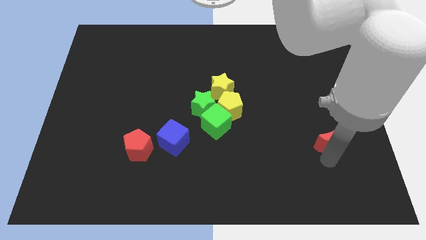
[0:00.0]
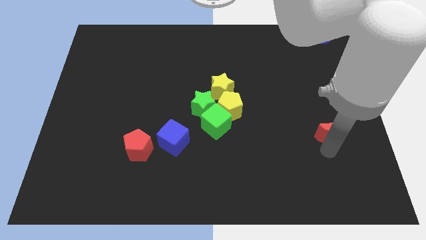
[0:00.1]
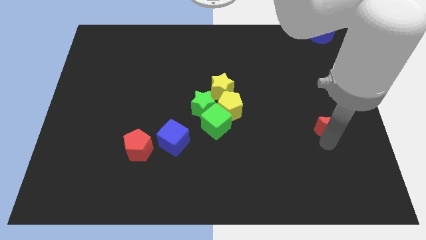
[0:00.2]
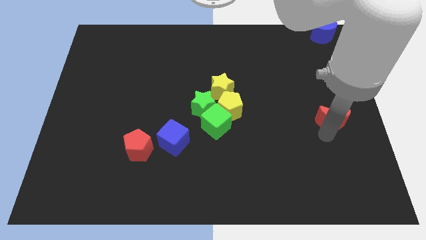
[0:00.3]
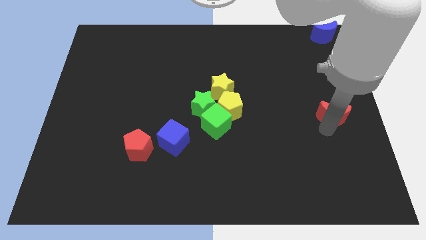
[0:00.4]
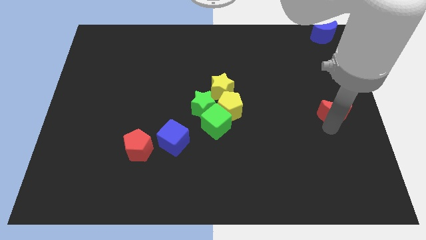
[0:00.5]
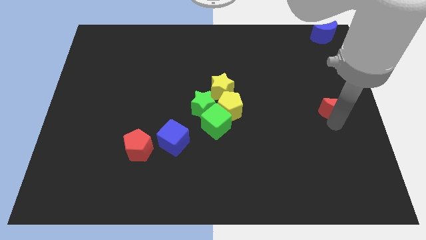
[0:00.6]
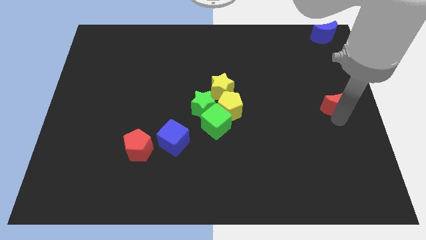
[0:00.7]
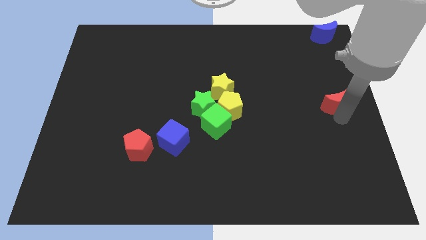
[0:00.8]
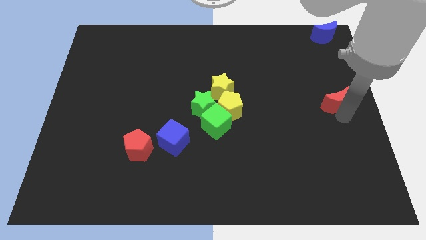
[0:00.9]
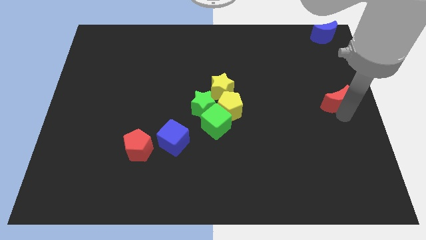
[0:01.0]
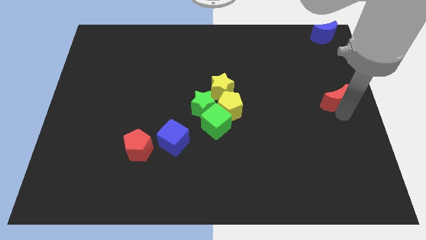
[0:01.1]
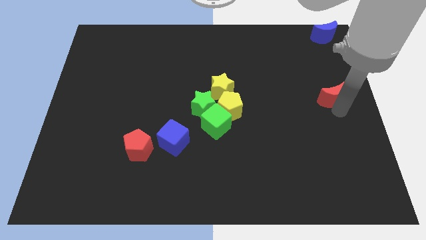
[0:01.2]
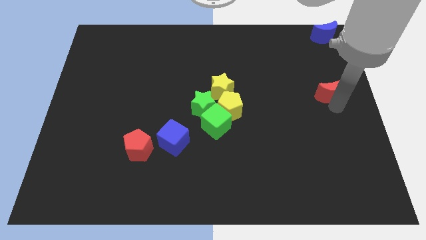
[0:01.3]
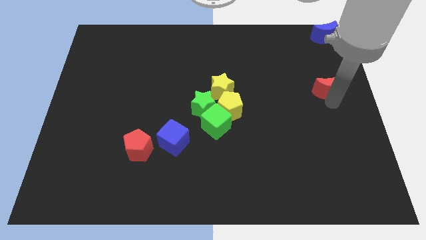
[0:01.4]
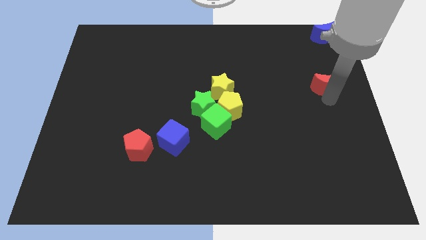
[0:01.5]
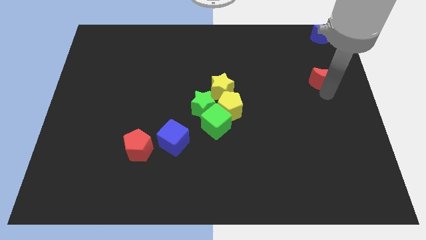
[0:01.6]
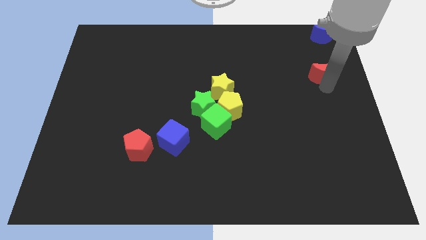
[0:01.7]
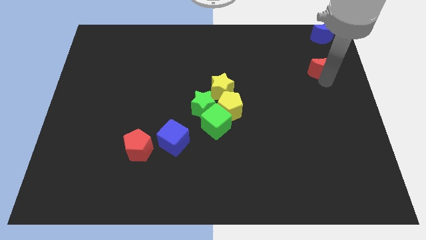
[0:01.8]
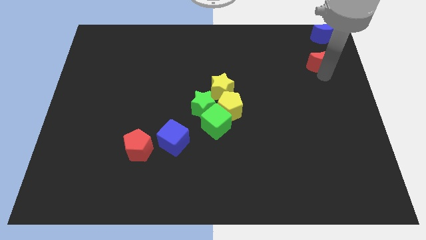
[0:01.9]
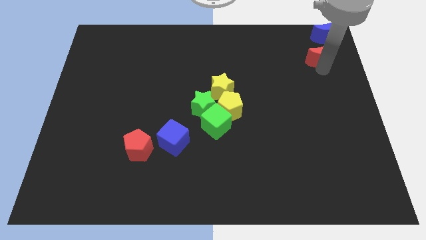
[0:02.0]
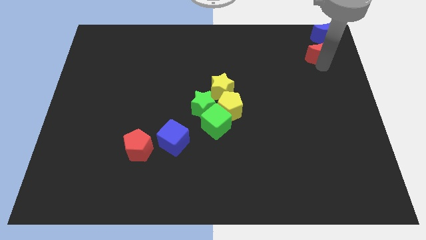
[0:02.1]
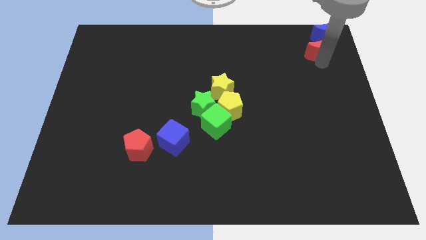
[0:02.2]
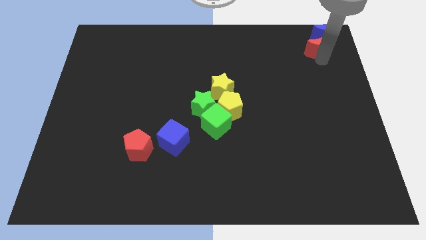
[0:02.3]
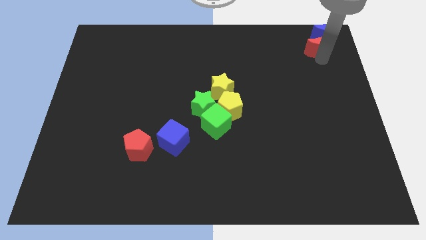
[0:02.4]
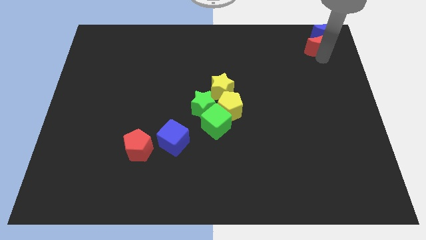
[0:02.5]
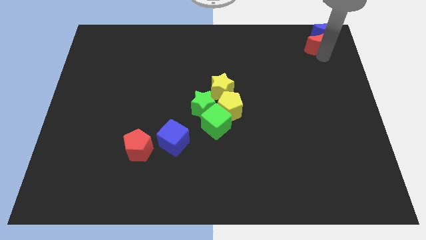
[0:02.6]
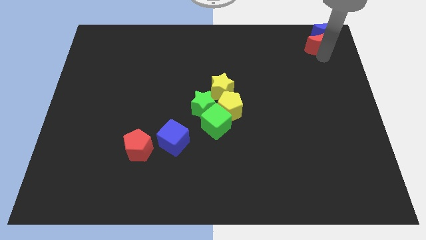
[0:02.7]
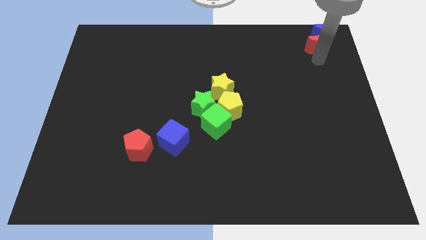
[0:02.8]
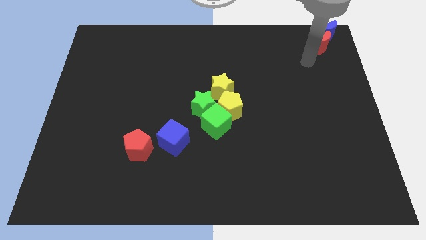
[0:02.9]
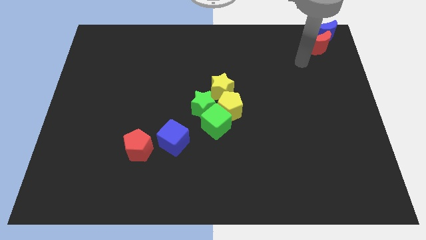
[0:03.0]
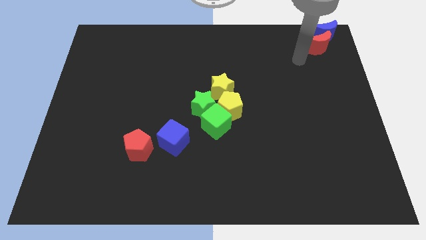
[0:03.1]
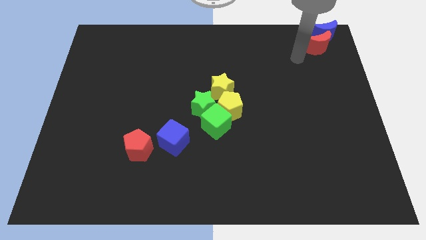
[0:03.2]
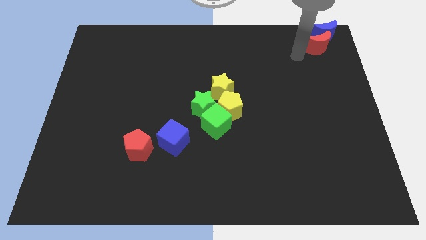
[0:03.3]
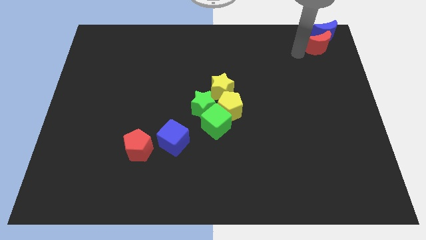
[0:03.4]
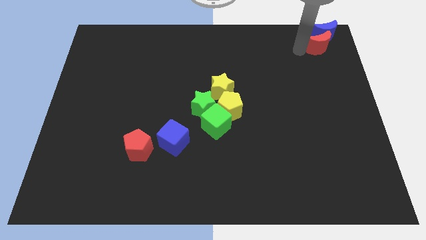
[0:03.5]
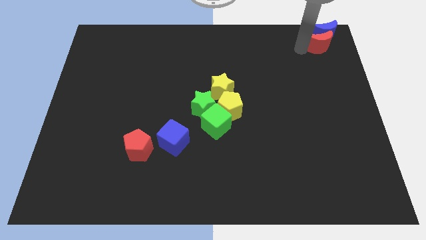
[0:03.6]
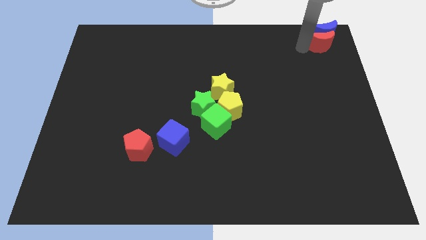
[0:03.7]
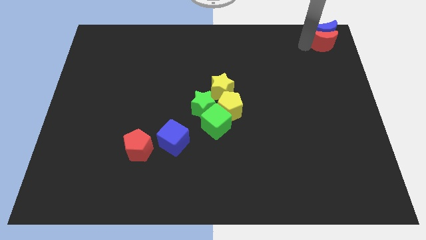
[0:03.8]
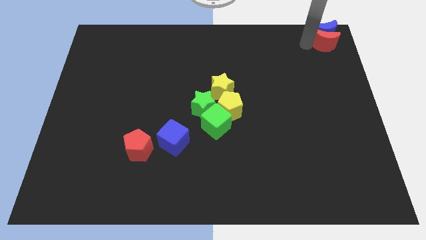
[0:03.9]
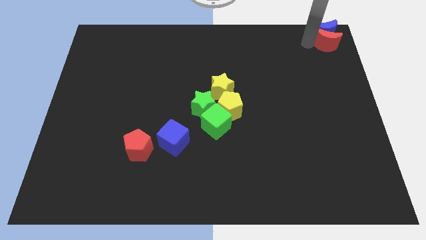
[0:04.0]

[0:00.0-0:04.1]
push the red crescent to the bottom side of the blue crescent

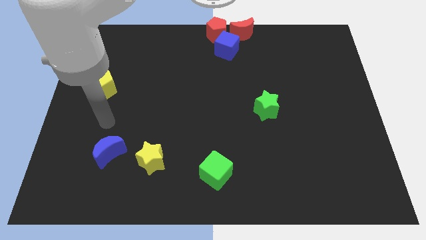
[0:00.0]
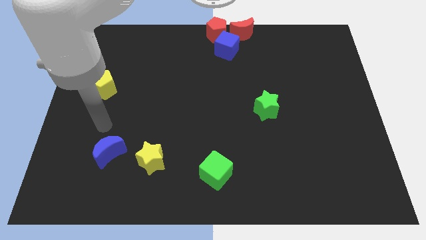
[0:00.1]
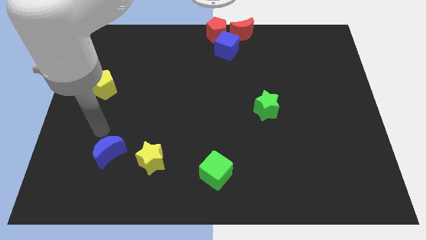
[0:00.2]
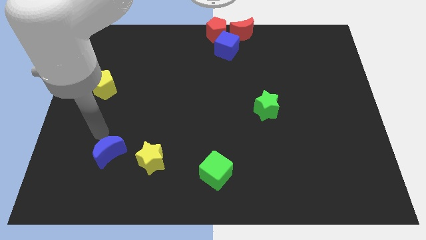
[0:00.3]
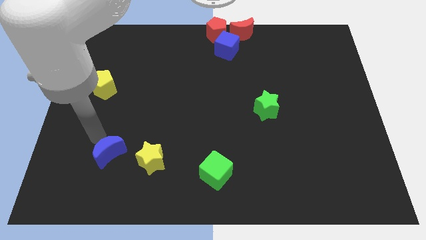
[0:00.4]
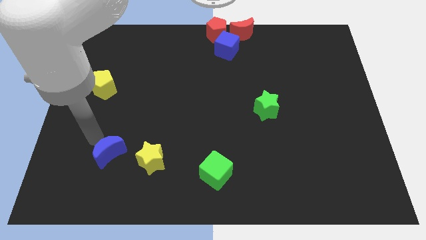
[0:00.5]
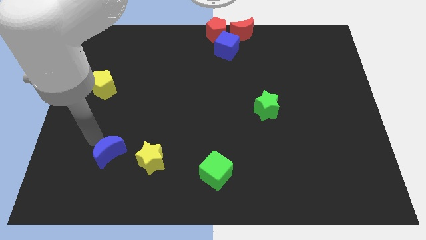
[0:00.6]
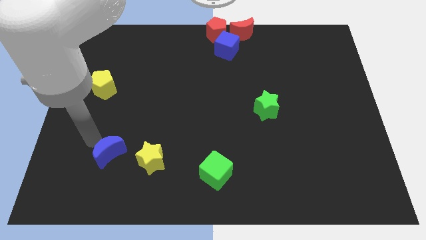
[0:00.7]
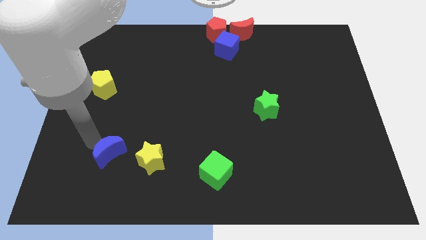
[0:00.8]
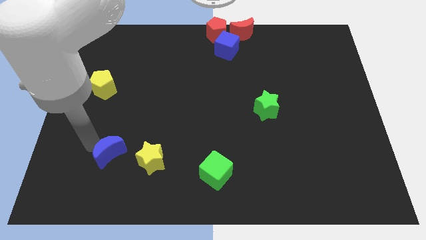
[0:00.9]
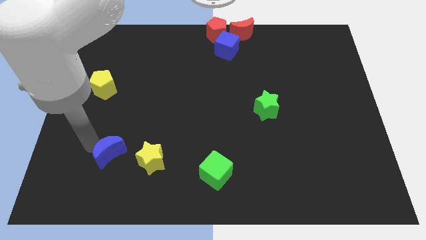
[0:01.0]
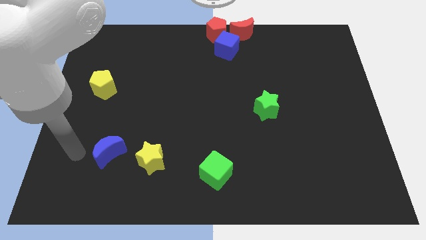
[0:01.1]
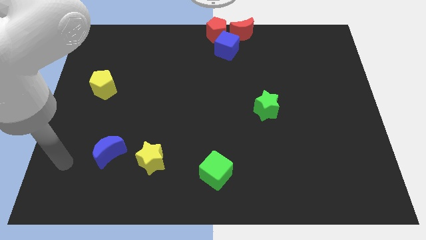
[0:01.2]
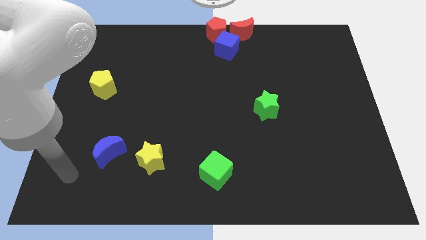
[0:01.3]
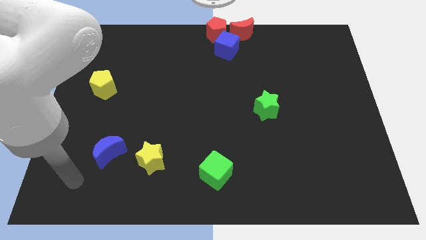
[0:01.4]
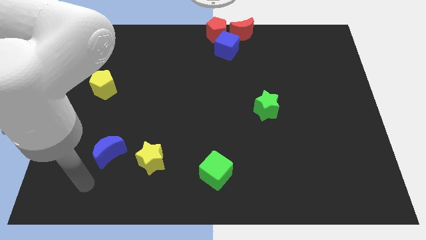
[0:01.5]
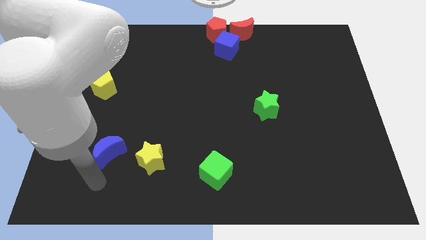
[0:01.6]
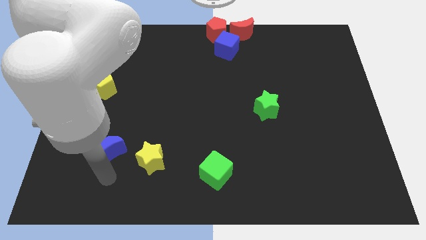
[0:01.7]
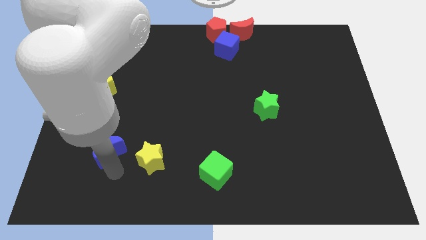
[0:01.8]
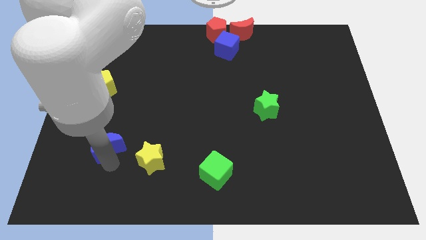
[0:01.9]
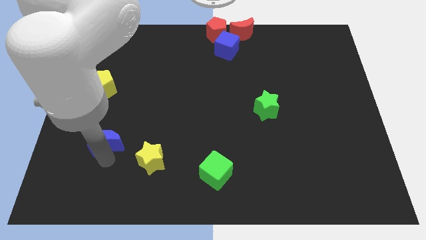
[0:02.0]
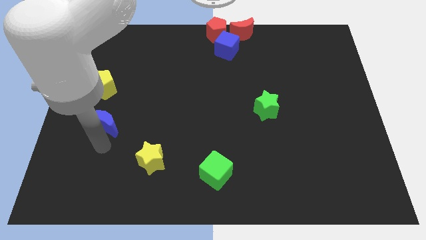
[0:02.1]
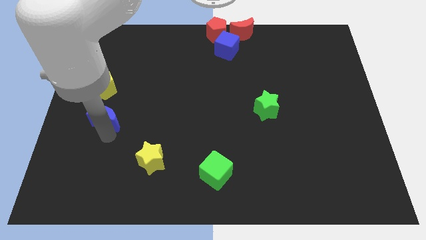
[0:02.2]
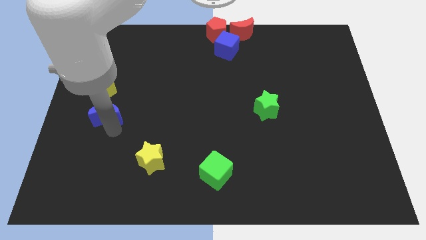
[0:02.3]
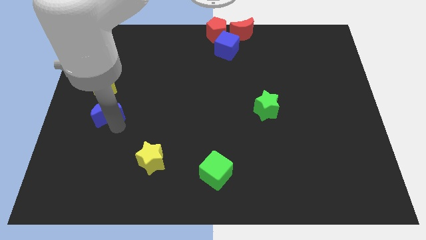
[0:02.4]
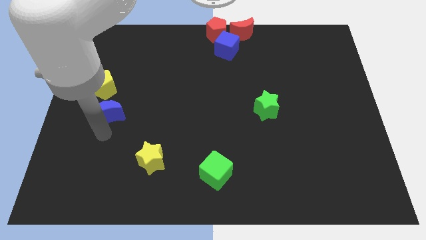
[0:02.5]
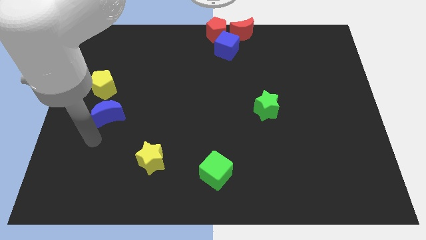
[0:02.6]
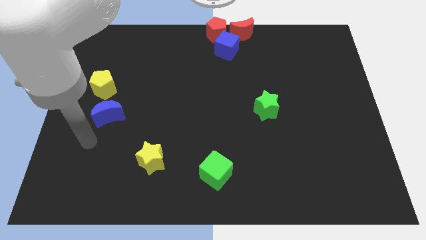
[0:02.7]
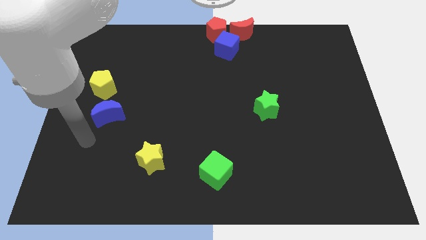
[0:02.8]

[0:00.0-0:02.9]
place the blue moon under the yellow pentagon

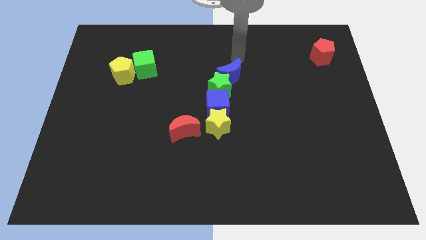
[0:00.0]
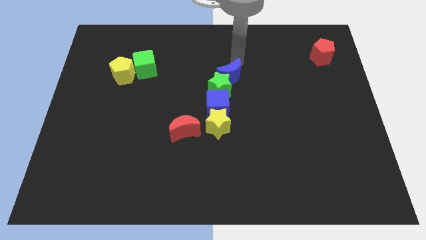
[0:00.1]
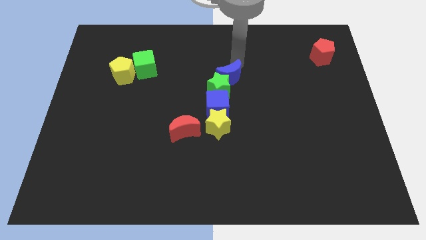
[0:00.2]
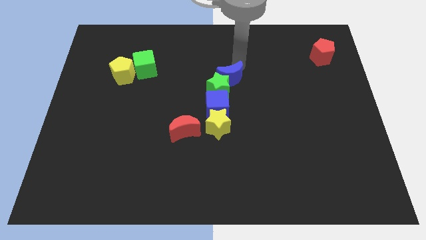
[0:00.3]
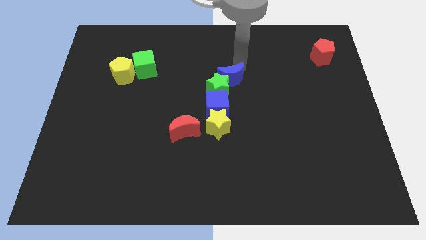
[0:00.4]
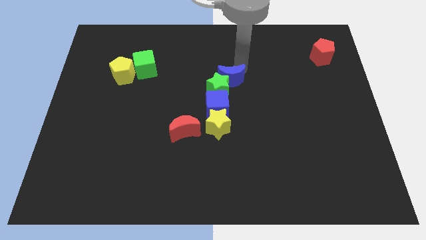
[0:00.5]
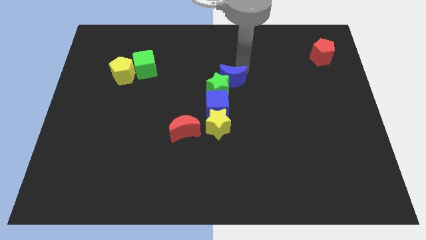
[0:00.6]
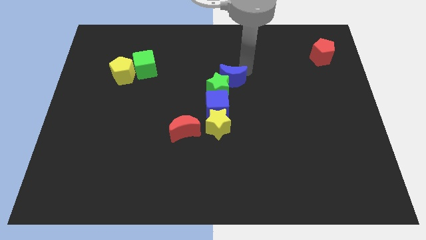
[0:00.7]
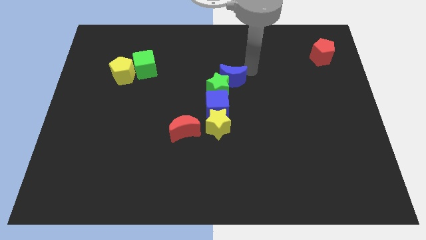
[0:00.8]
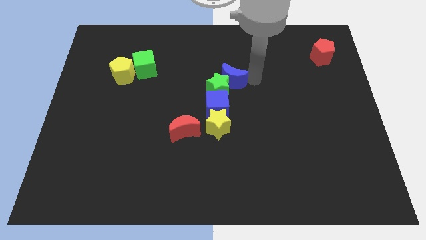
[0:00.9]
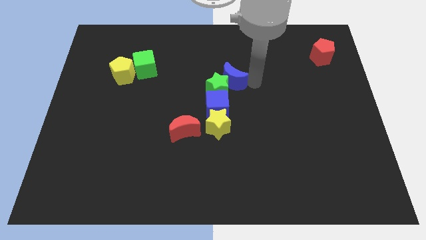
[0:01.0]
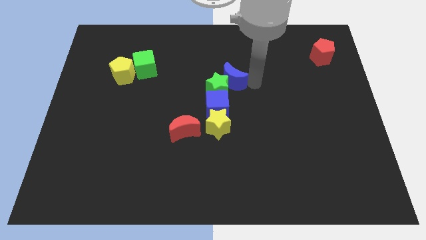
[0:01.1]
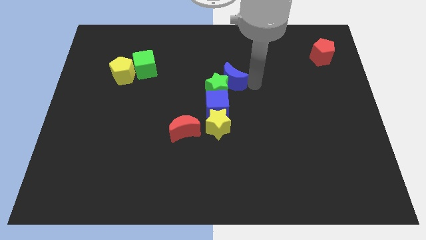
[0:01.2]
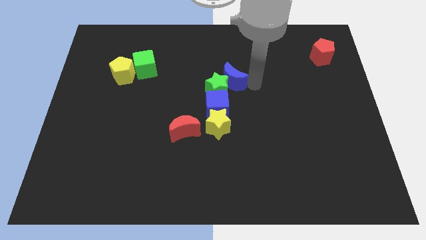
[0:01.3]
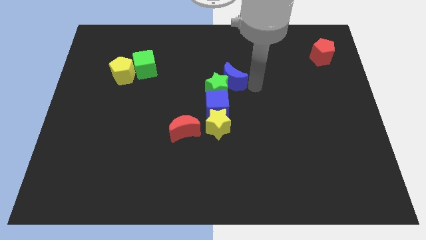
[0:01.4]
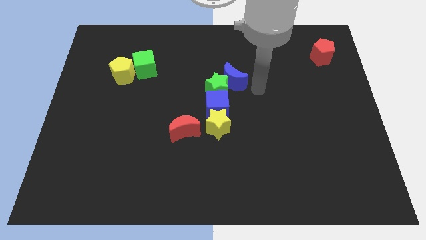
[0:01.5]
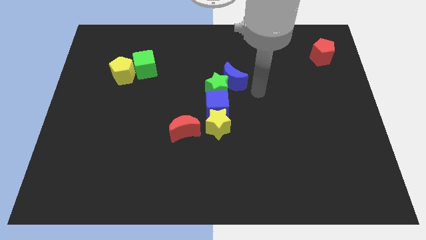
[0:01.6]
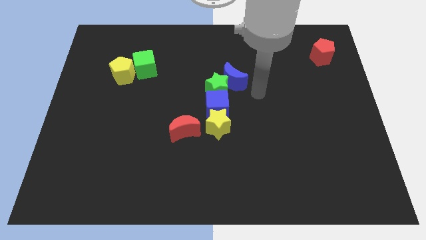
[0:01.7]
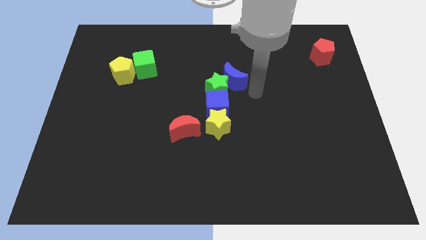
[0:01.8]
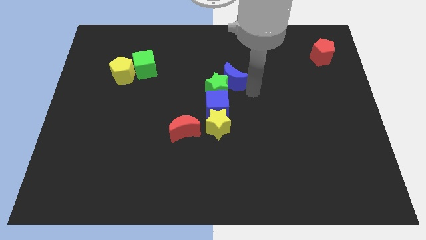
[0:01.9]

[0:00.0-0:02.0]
slide the blue crescent to the right side of the green star
